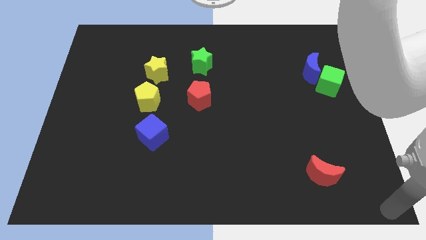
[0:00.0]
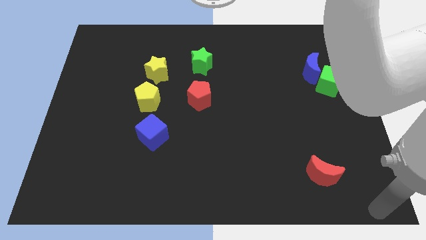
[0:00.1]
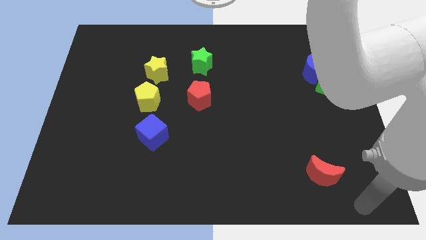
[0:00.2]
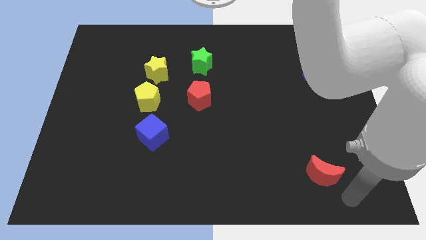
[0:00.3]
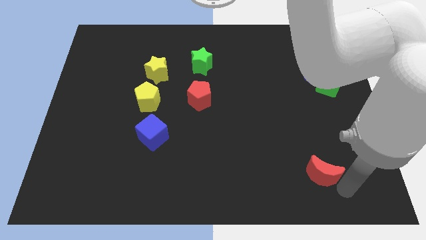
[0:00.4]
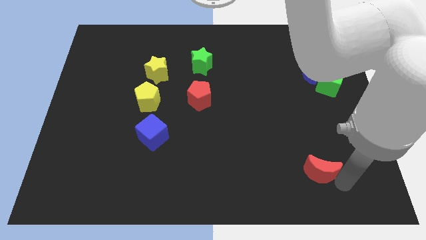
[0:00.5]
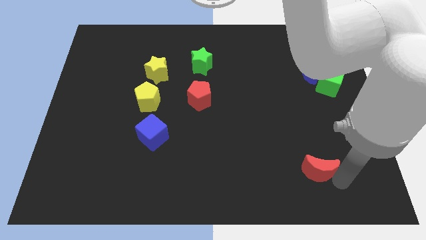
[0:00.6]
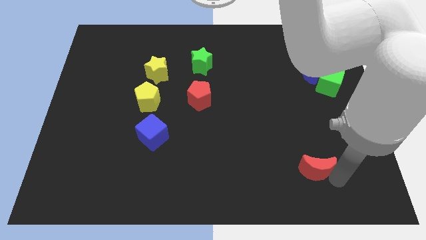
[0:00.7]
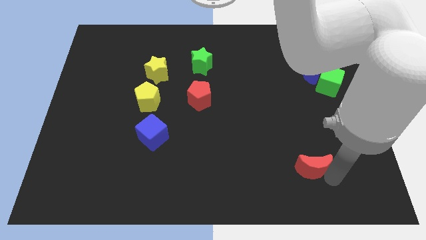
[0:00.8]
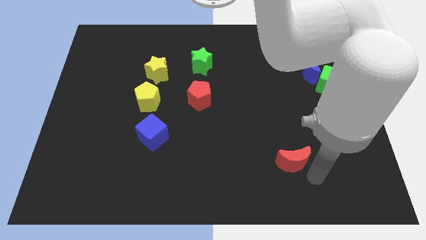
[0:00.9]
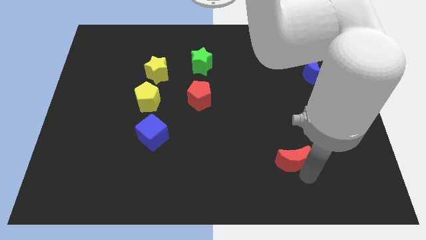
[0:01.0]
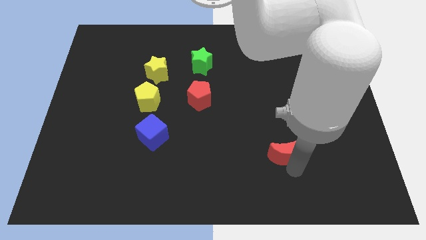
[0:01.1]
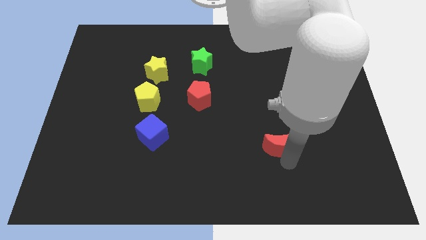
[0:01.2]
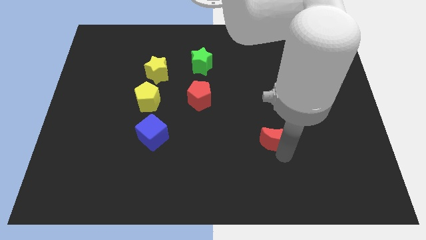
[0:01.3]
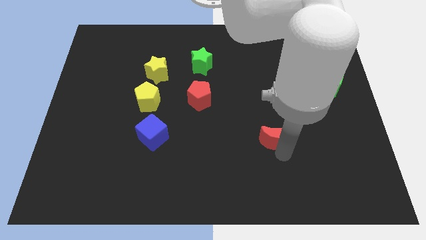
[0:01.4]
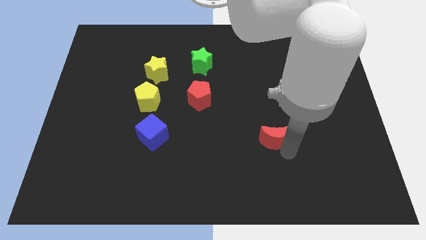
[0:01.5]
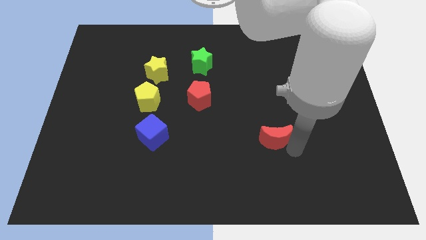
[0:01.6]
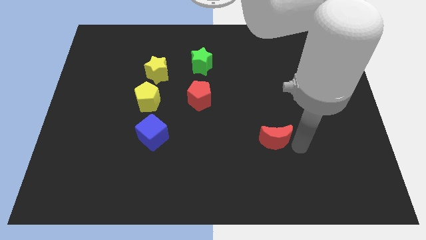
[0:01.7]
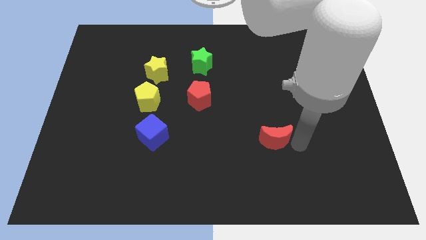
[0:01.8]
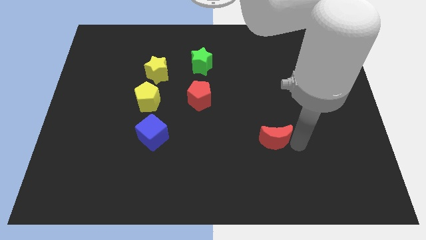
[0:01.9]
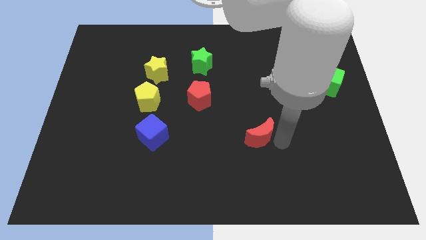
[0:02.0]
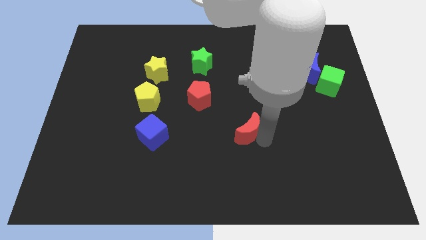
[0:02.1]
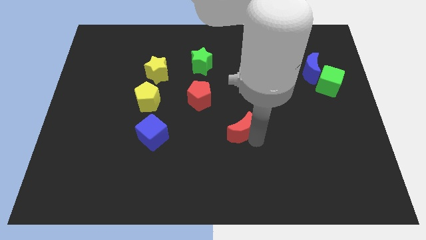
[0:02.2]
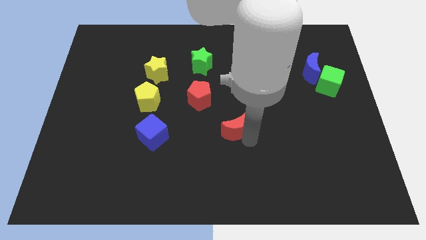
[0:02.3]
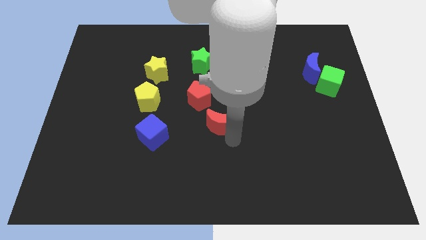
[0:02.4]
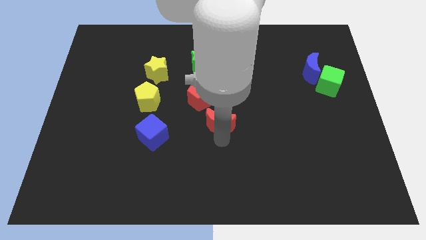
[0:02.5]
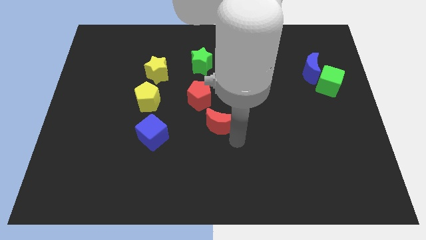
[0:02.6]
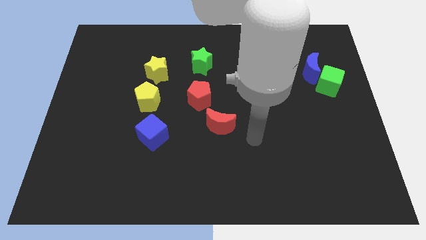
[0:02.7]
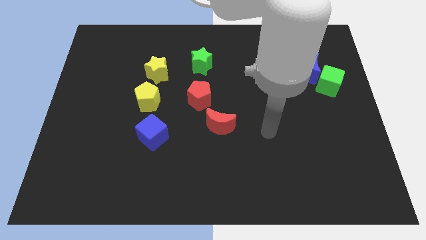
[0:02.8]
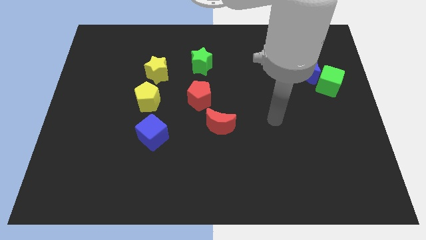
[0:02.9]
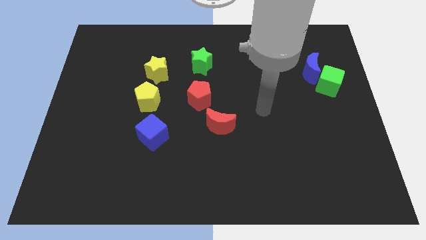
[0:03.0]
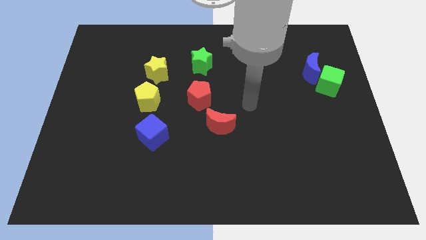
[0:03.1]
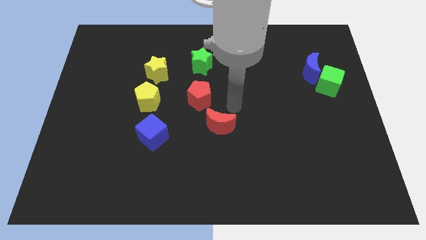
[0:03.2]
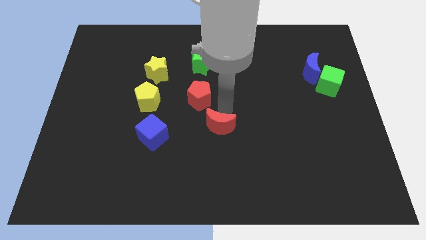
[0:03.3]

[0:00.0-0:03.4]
place the red crescent to the bottom right of the red pentagon

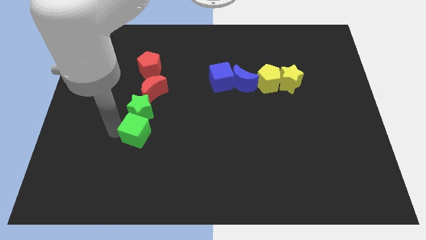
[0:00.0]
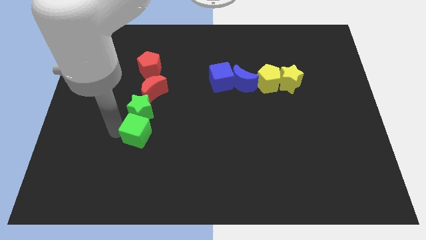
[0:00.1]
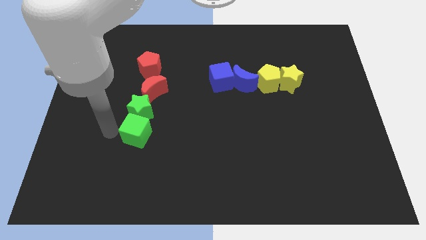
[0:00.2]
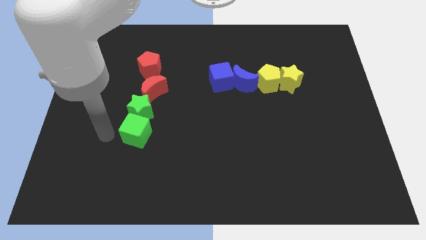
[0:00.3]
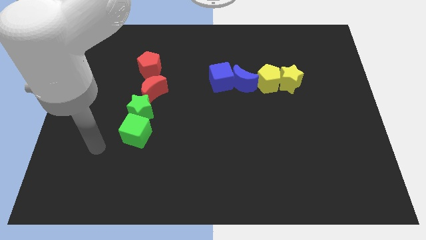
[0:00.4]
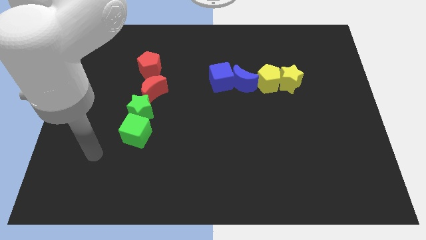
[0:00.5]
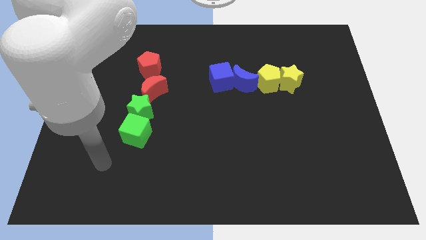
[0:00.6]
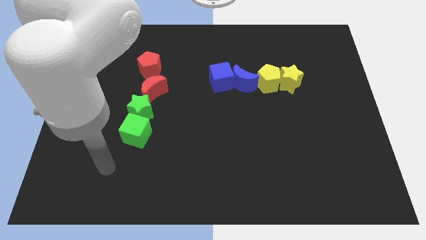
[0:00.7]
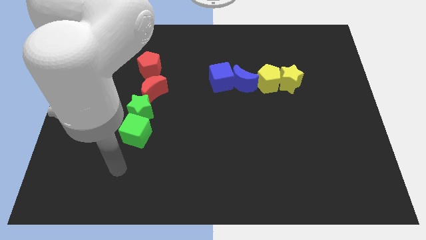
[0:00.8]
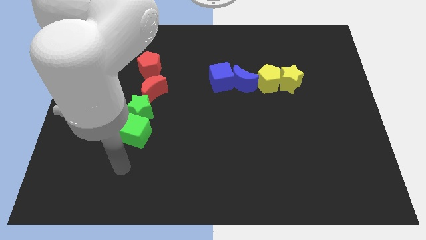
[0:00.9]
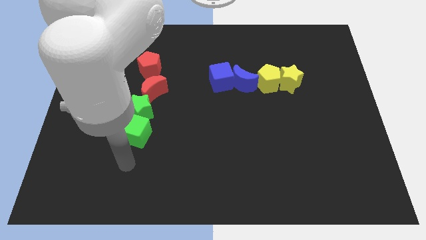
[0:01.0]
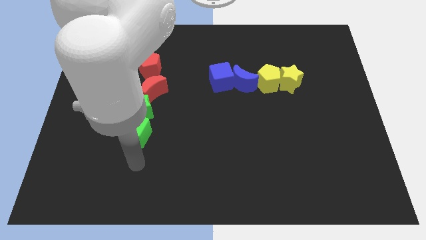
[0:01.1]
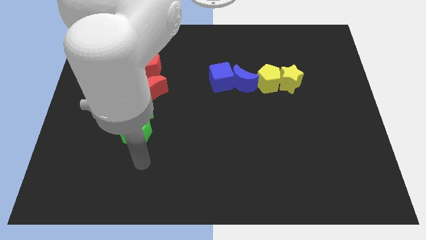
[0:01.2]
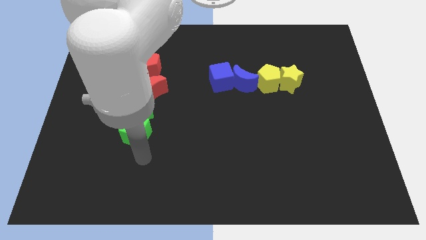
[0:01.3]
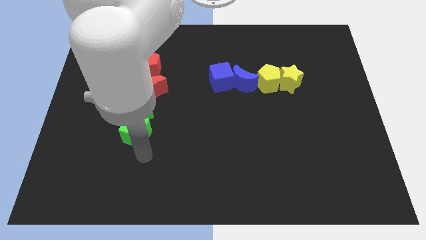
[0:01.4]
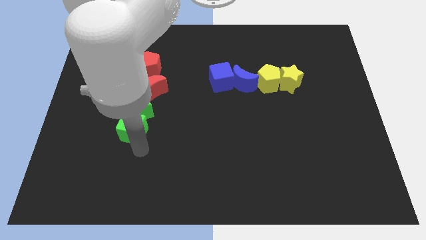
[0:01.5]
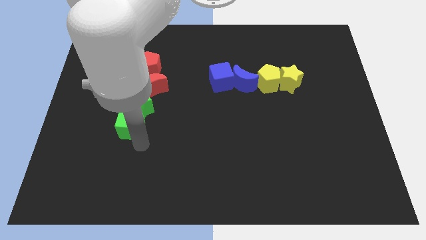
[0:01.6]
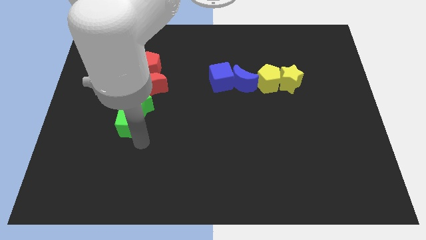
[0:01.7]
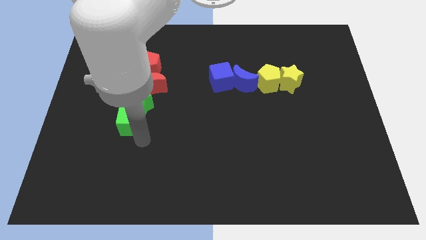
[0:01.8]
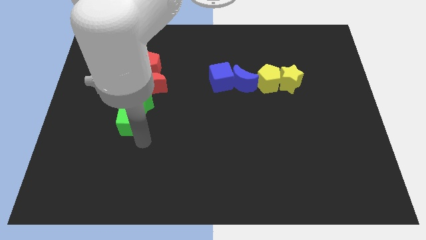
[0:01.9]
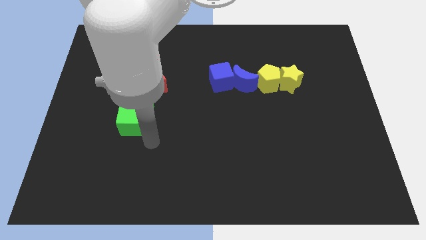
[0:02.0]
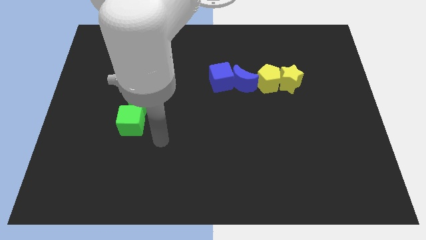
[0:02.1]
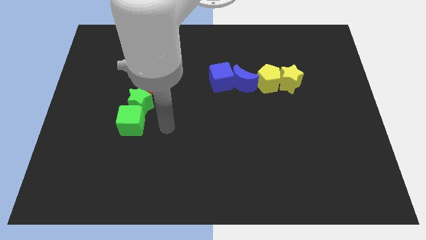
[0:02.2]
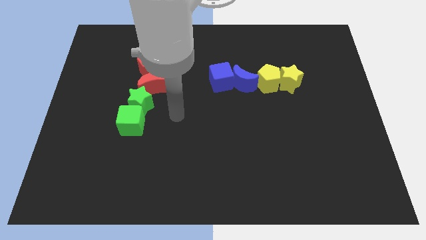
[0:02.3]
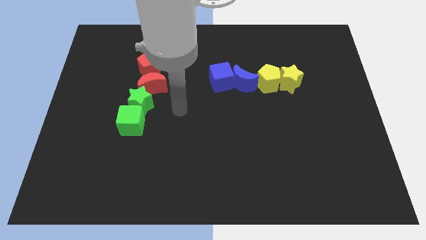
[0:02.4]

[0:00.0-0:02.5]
place green cube below the green star

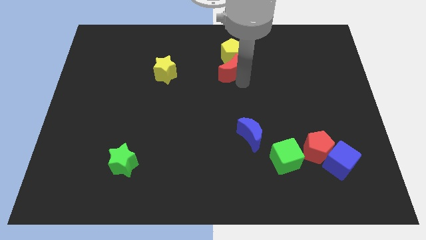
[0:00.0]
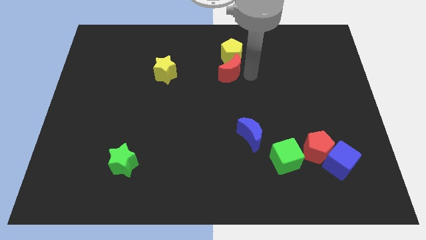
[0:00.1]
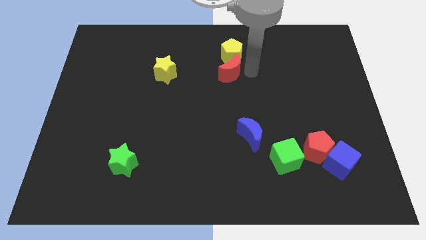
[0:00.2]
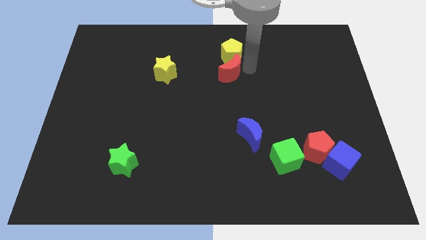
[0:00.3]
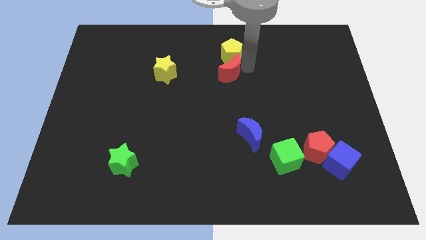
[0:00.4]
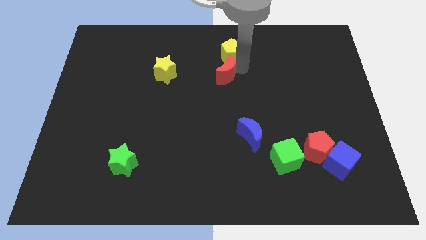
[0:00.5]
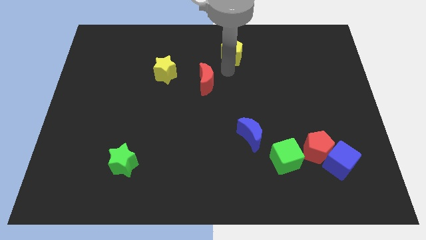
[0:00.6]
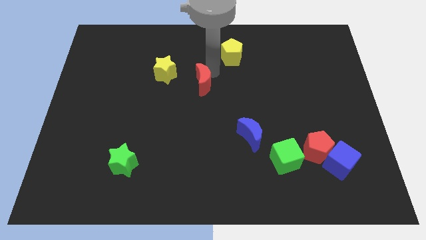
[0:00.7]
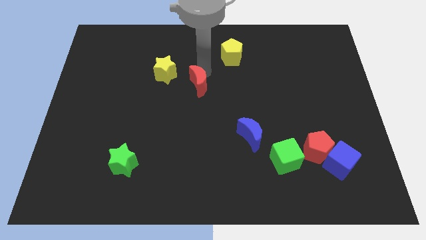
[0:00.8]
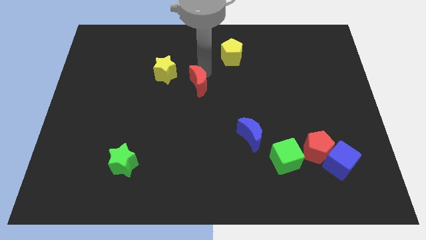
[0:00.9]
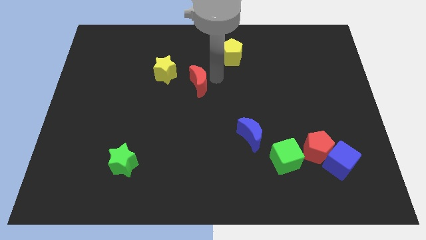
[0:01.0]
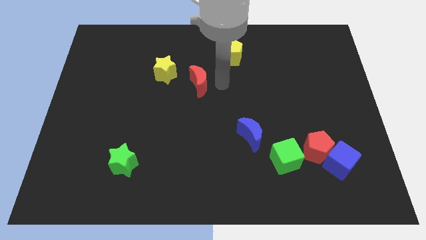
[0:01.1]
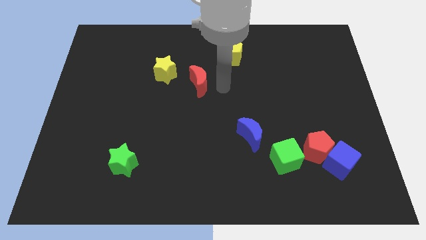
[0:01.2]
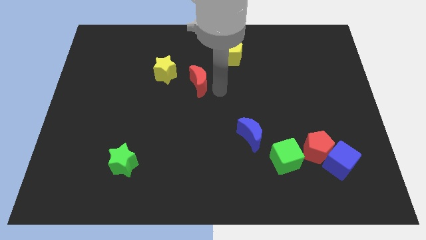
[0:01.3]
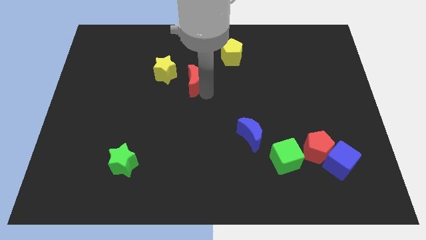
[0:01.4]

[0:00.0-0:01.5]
separate the red moon from the yellow pentagon

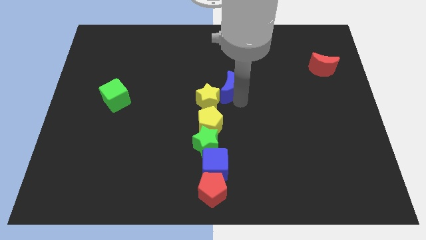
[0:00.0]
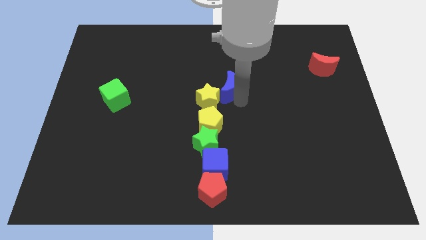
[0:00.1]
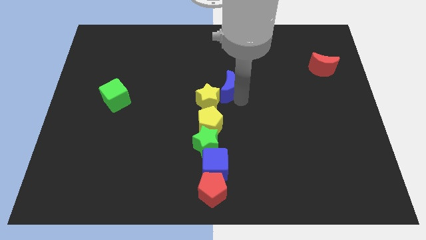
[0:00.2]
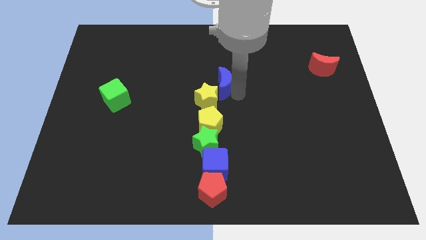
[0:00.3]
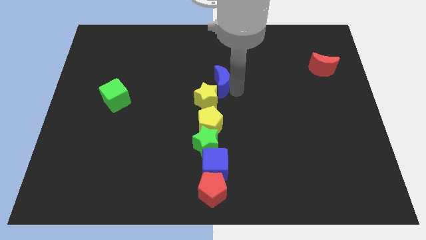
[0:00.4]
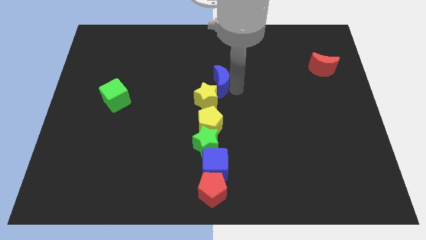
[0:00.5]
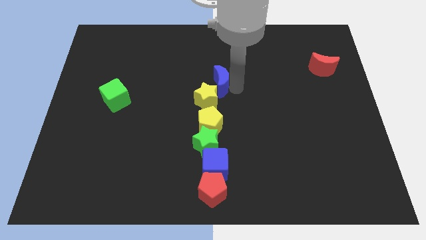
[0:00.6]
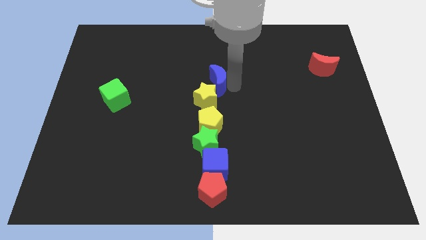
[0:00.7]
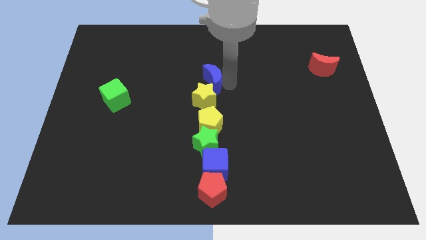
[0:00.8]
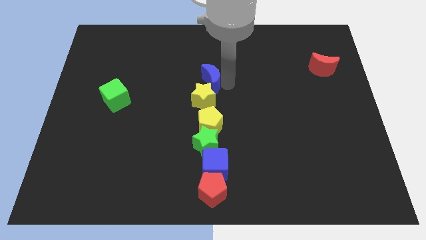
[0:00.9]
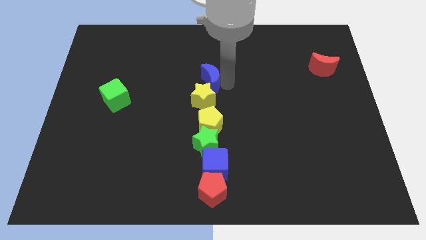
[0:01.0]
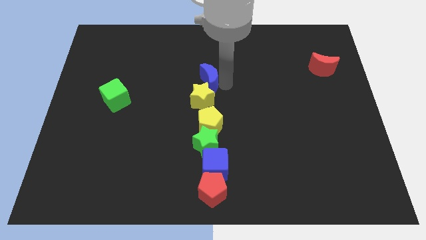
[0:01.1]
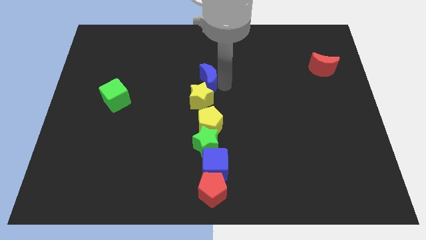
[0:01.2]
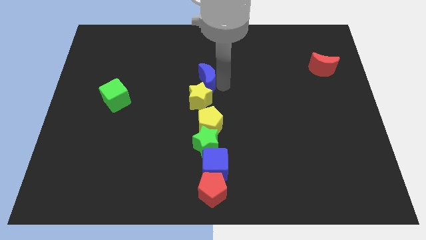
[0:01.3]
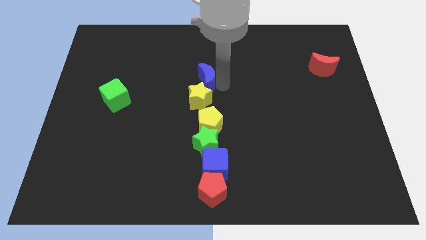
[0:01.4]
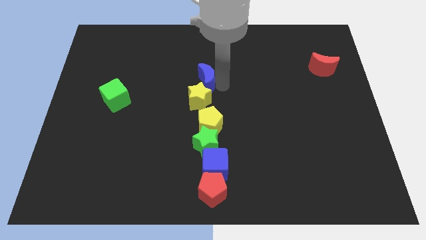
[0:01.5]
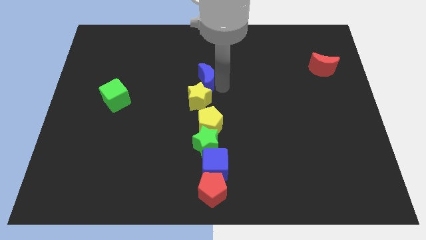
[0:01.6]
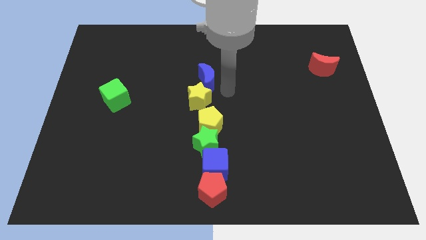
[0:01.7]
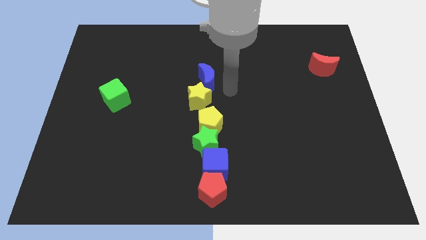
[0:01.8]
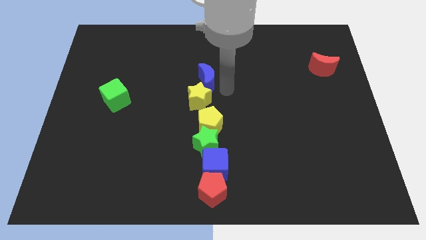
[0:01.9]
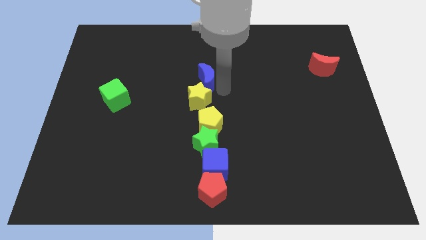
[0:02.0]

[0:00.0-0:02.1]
slightly move the blue moon and yellow star to left side
